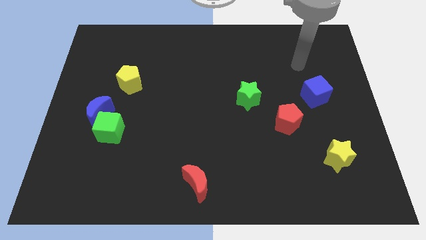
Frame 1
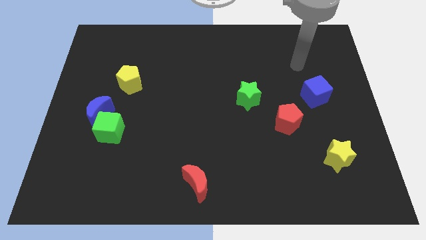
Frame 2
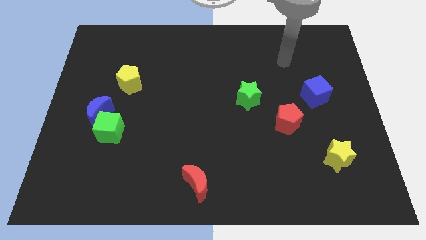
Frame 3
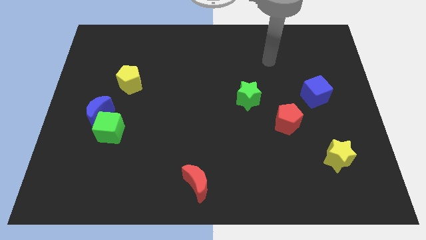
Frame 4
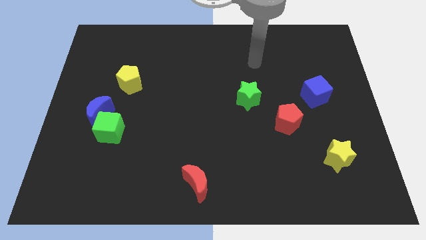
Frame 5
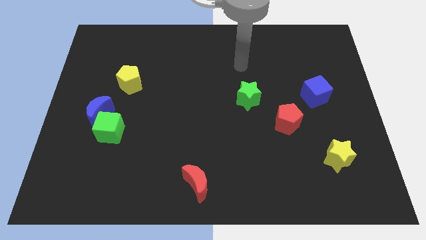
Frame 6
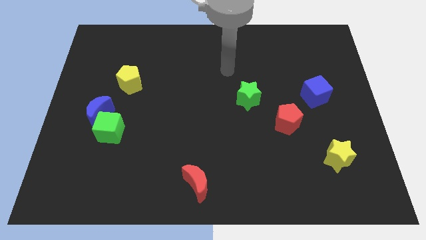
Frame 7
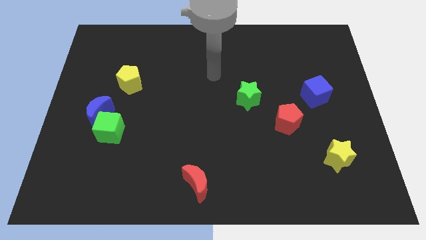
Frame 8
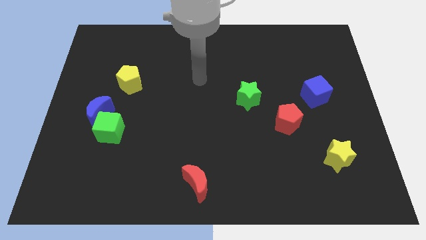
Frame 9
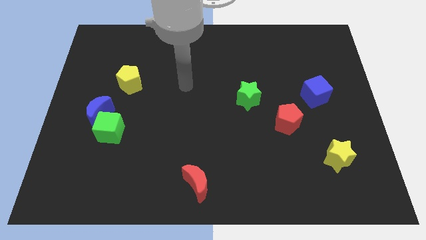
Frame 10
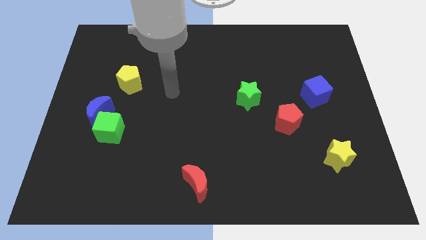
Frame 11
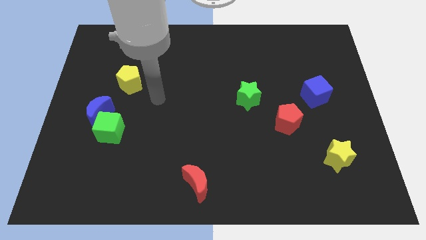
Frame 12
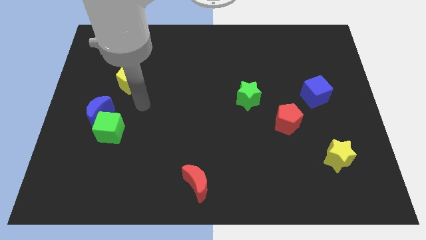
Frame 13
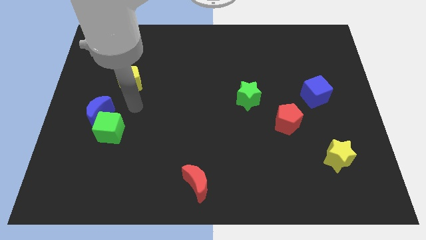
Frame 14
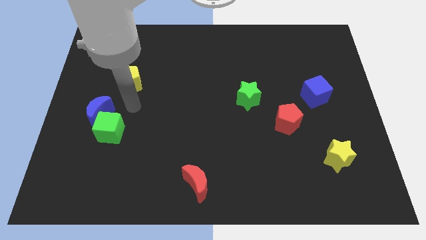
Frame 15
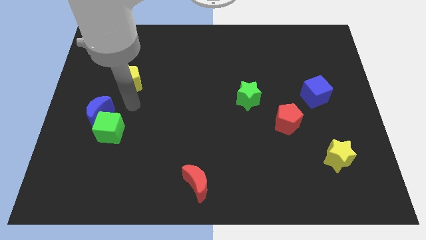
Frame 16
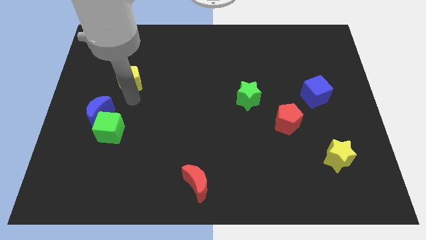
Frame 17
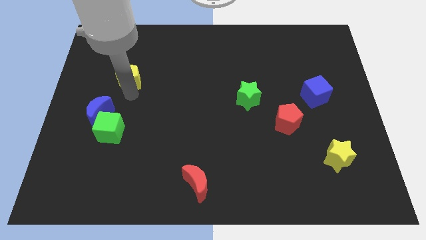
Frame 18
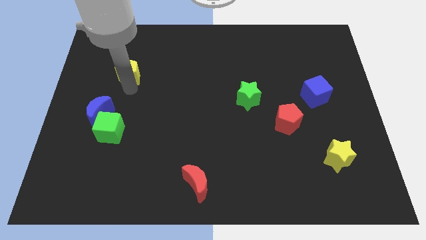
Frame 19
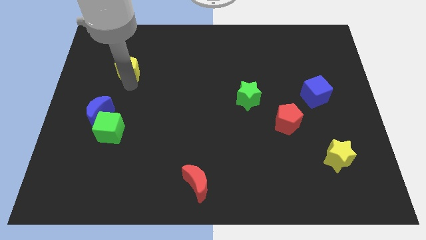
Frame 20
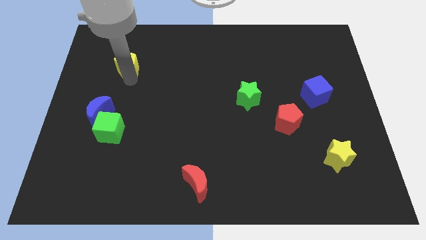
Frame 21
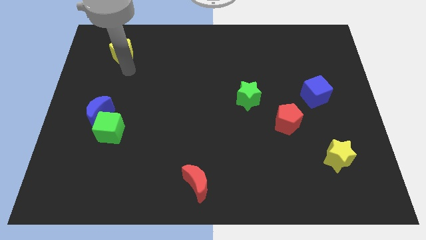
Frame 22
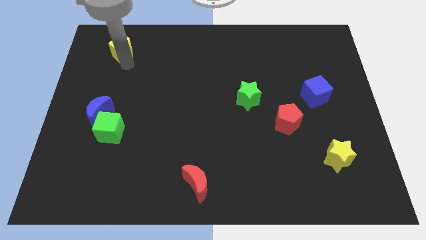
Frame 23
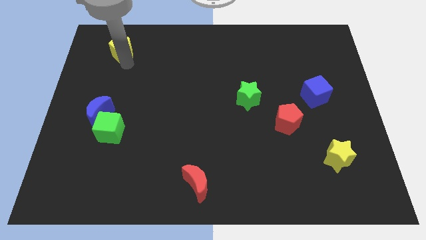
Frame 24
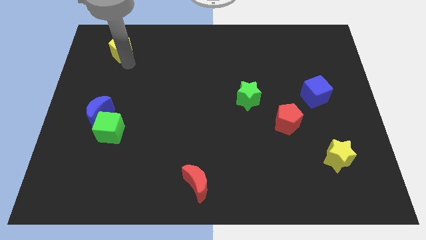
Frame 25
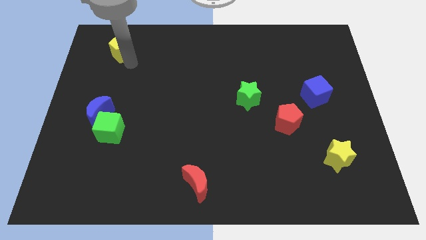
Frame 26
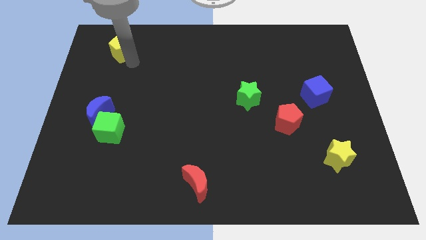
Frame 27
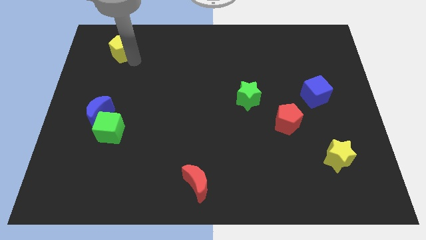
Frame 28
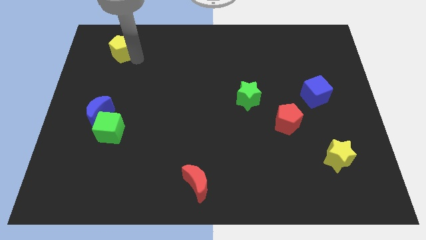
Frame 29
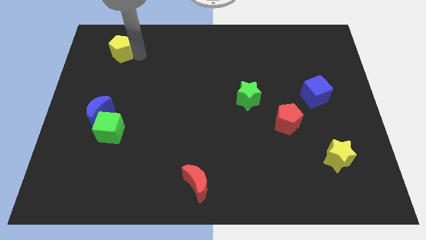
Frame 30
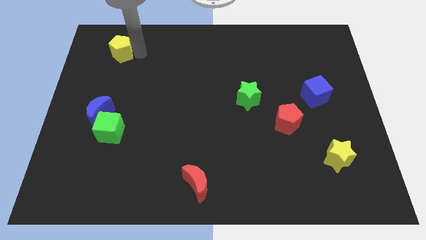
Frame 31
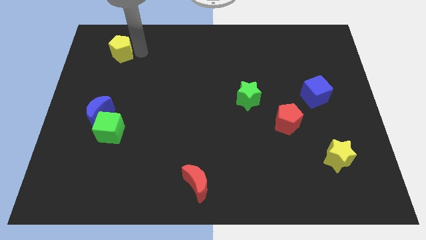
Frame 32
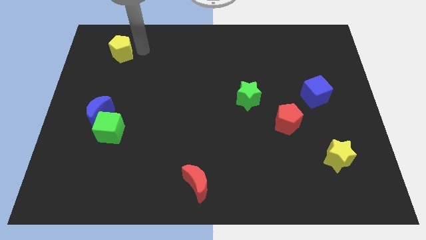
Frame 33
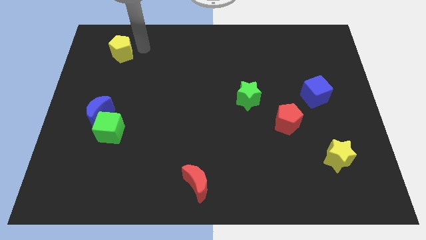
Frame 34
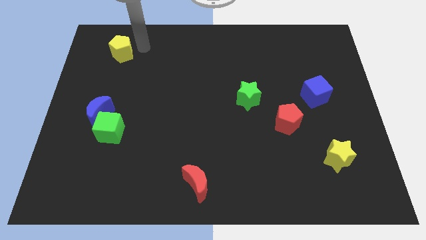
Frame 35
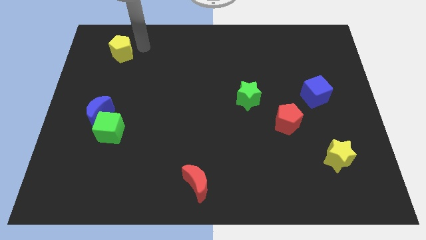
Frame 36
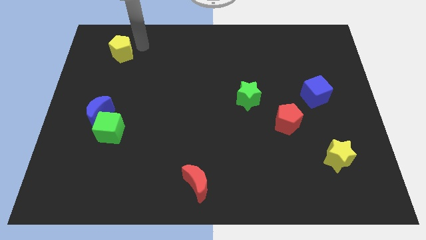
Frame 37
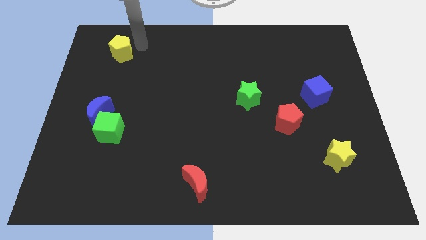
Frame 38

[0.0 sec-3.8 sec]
push the yellow pentagon up slightly

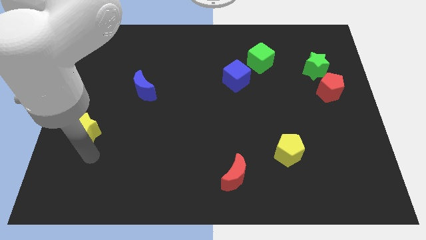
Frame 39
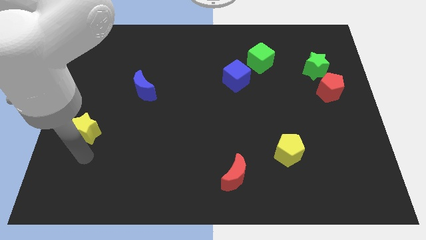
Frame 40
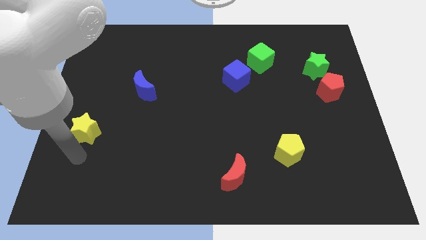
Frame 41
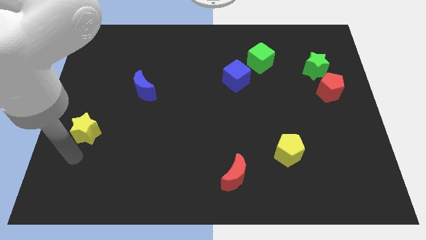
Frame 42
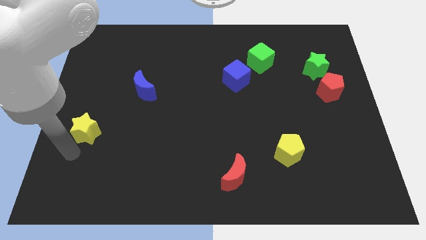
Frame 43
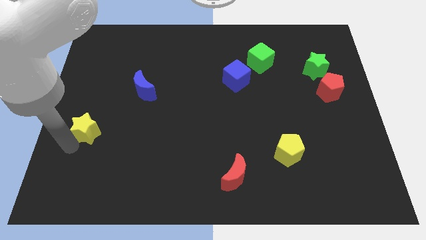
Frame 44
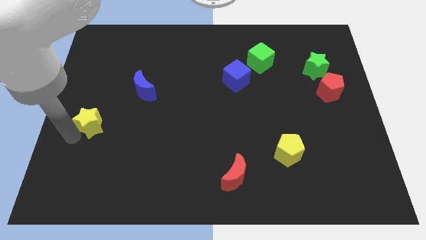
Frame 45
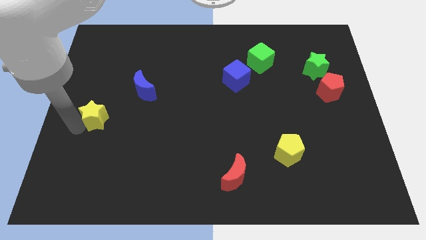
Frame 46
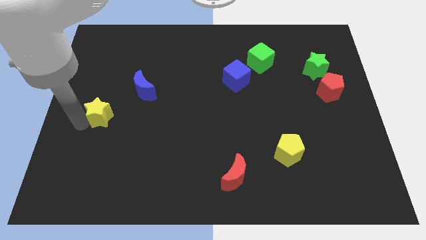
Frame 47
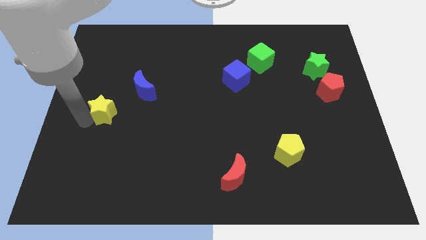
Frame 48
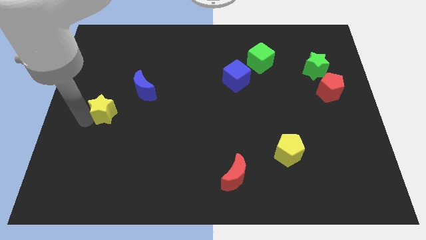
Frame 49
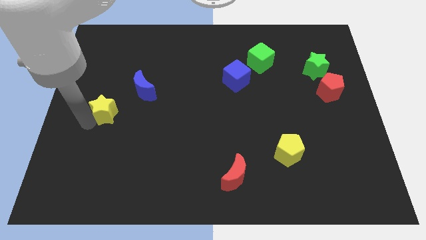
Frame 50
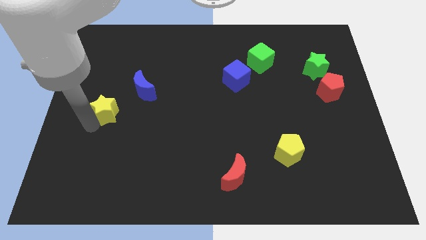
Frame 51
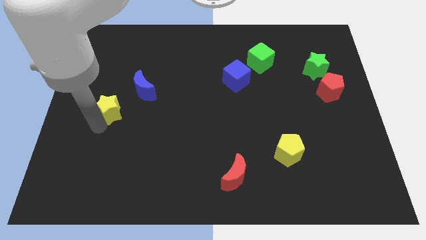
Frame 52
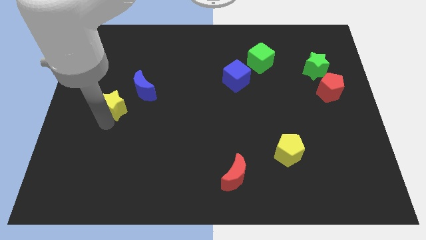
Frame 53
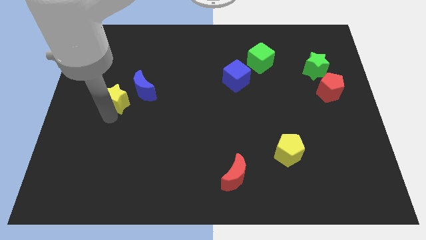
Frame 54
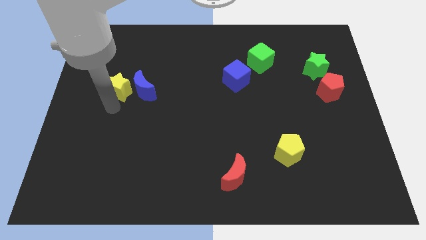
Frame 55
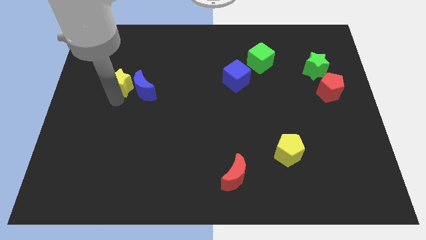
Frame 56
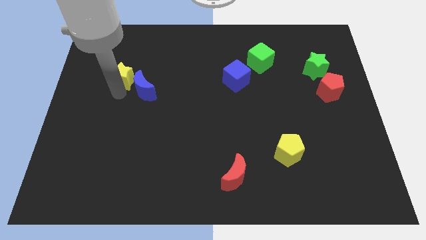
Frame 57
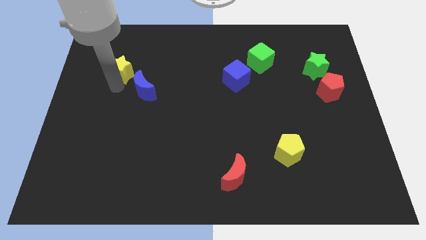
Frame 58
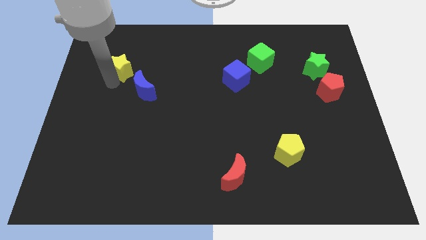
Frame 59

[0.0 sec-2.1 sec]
push yellow star close to blue moon

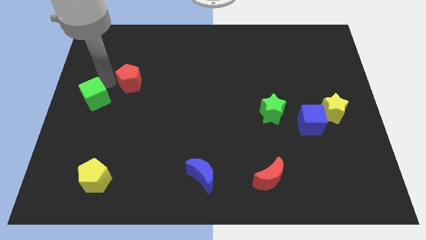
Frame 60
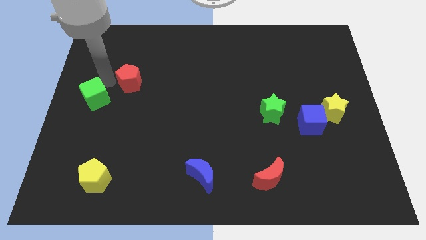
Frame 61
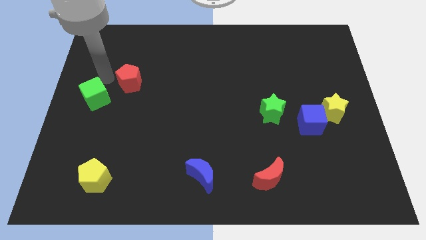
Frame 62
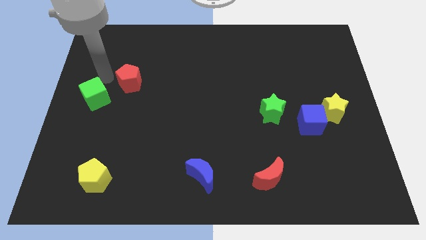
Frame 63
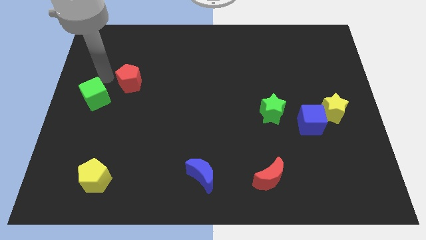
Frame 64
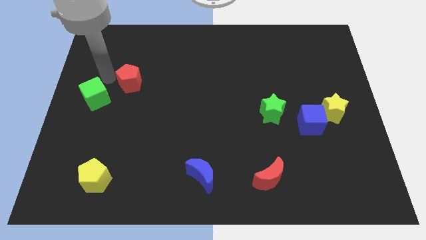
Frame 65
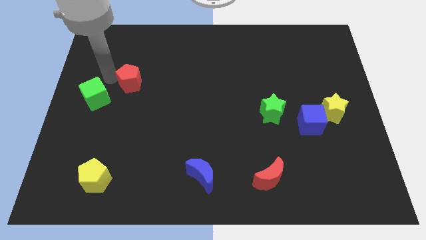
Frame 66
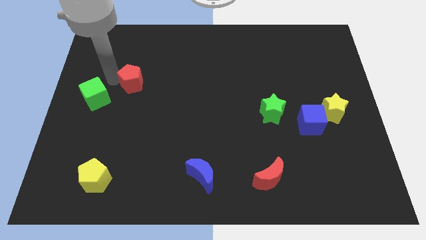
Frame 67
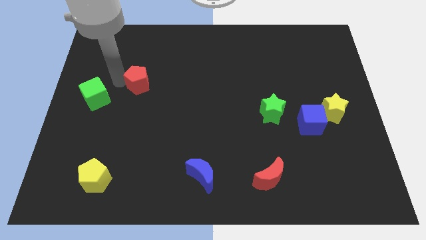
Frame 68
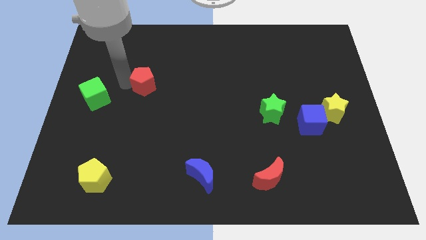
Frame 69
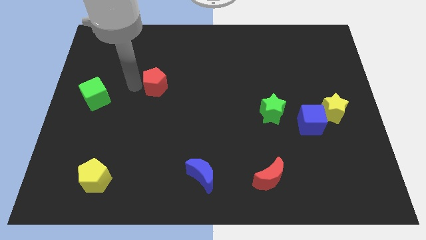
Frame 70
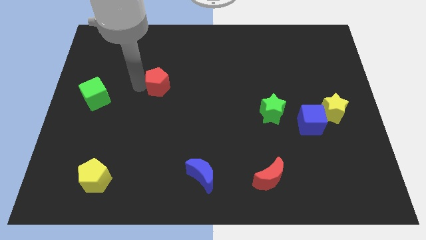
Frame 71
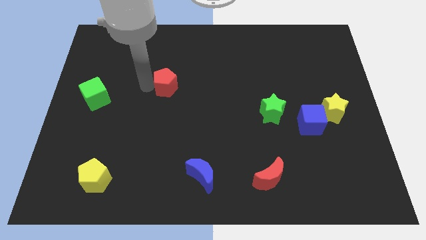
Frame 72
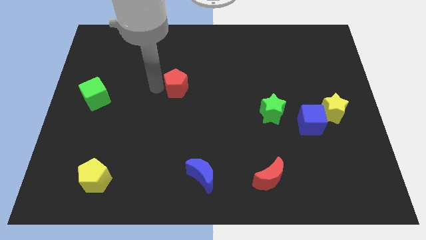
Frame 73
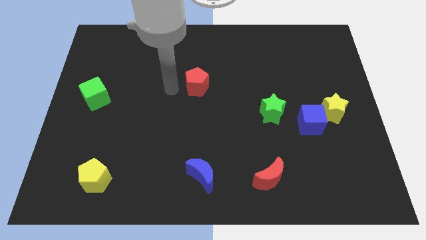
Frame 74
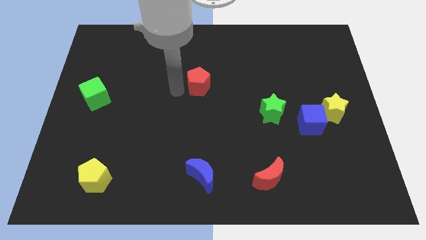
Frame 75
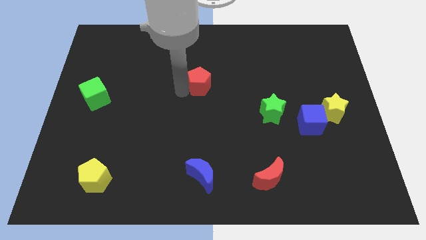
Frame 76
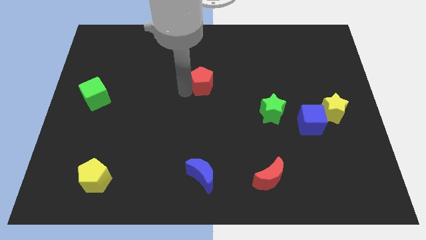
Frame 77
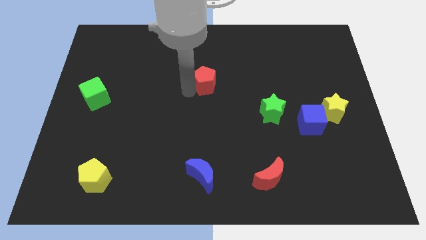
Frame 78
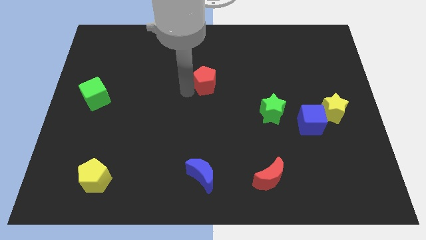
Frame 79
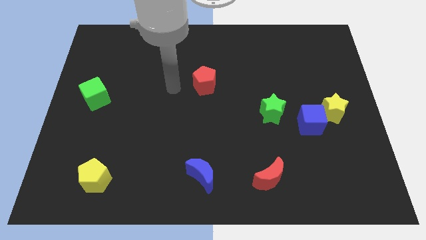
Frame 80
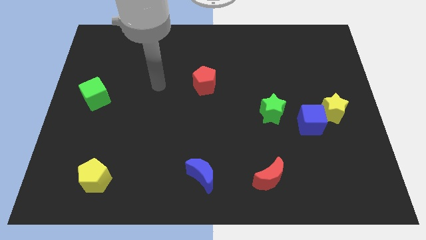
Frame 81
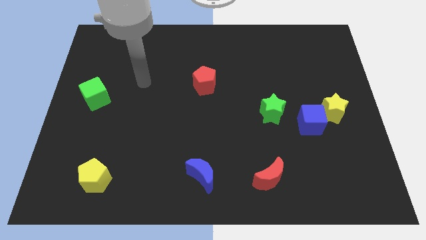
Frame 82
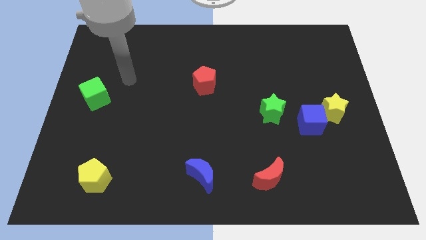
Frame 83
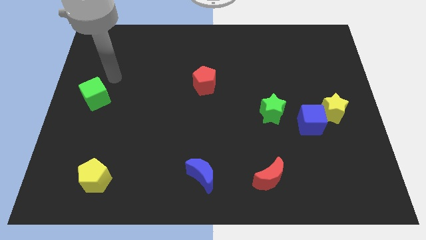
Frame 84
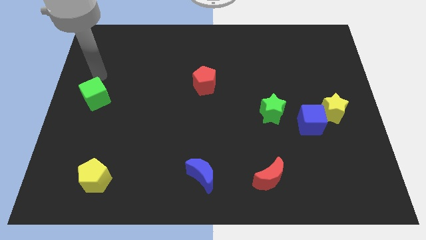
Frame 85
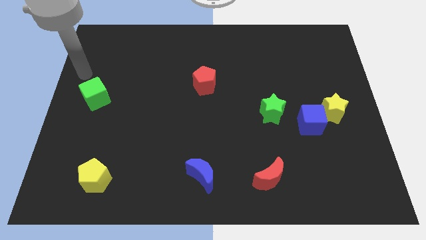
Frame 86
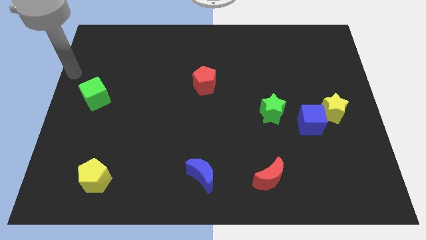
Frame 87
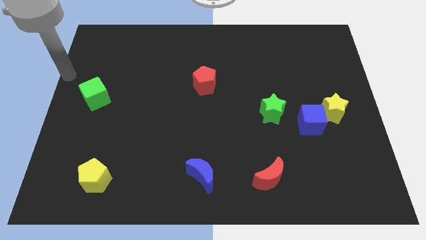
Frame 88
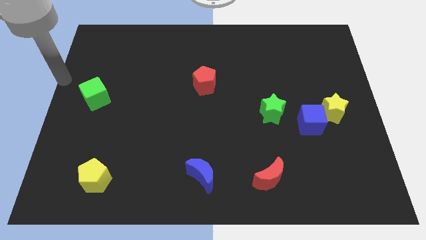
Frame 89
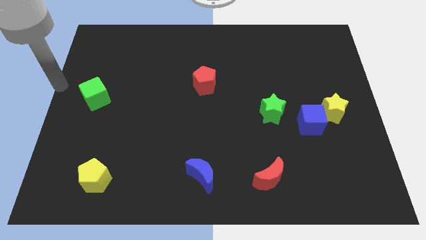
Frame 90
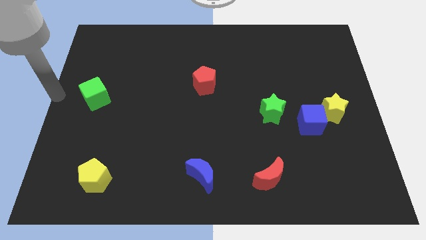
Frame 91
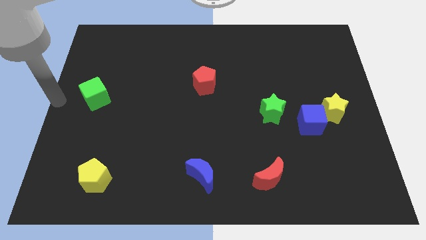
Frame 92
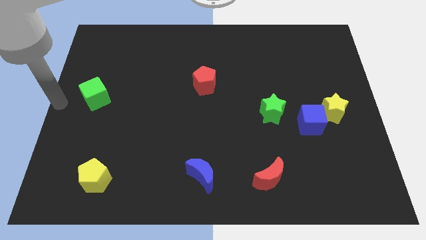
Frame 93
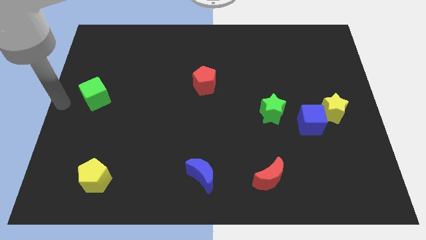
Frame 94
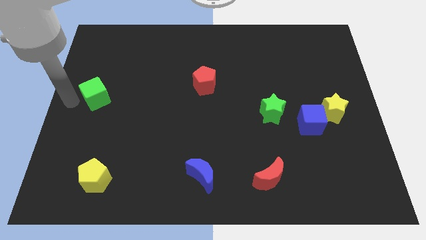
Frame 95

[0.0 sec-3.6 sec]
push the red pentagon to the top left of the green star
